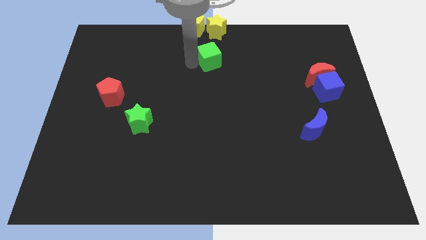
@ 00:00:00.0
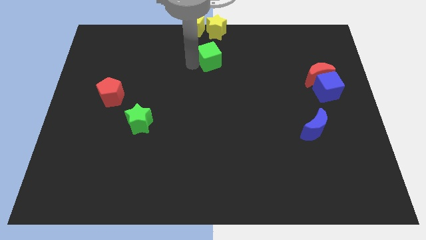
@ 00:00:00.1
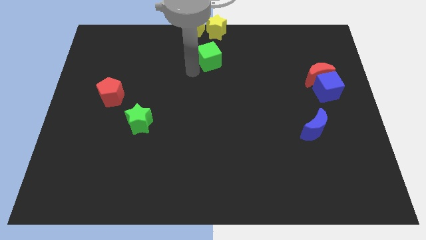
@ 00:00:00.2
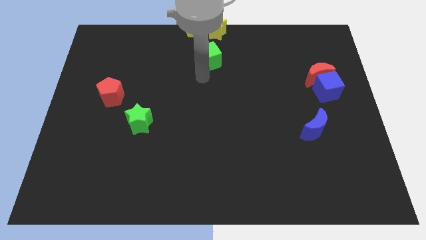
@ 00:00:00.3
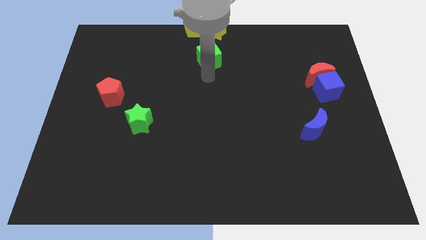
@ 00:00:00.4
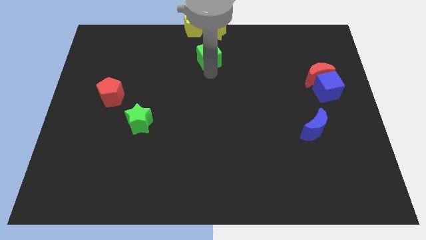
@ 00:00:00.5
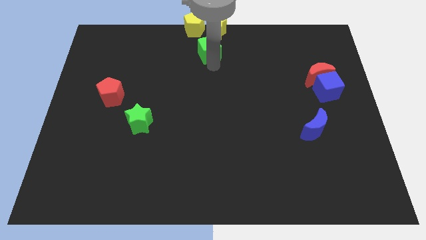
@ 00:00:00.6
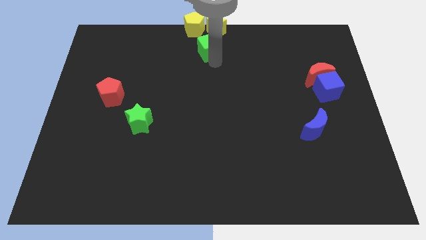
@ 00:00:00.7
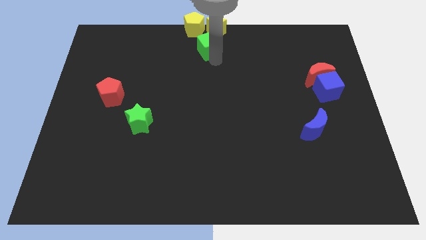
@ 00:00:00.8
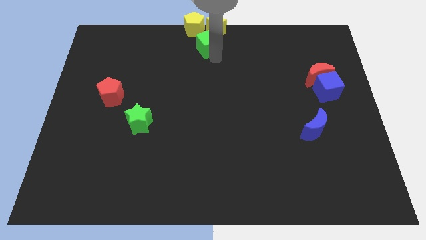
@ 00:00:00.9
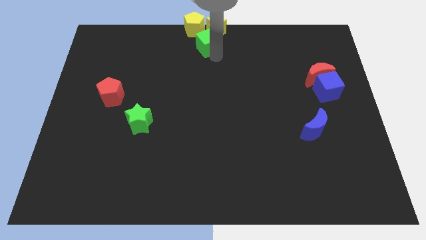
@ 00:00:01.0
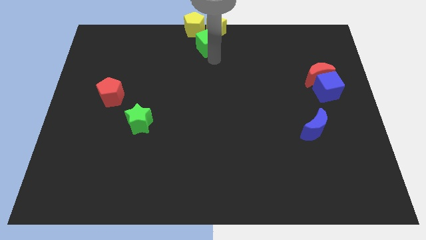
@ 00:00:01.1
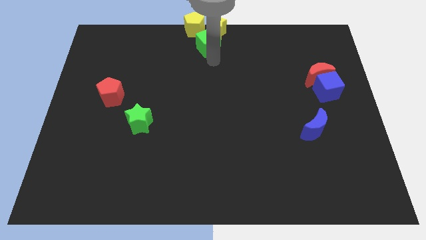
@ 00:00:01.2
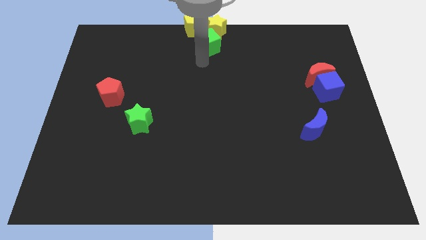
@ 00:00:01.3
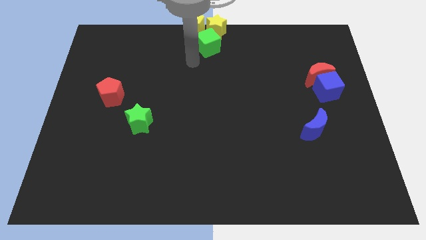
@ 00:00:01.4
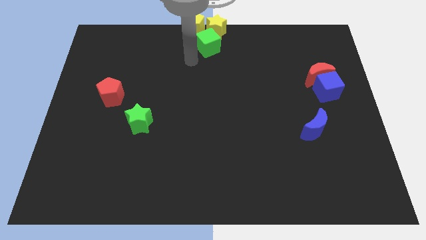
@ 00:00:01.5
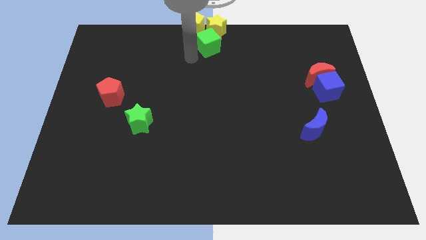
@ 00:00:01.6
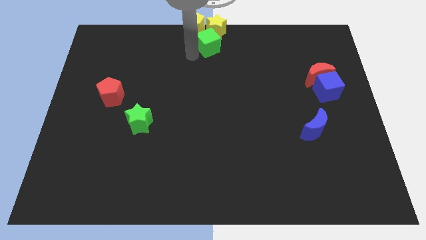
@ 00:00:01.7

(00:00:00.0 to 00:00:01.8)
place the green cube to the top center of the board

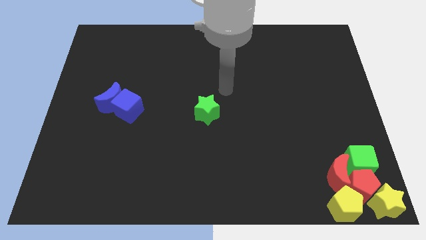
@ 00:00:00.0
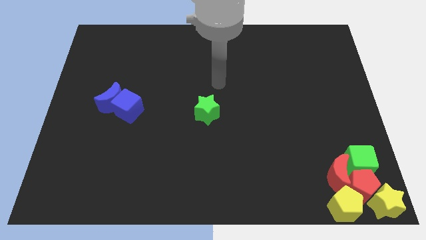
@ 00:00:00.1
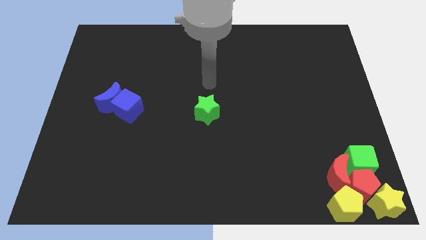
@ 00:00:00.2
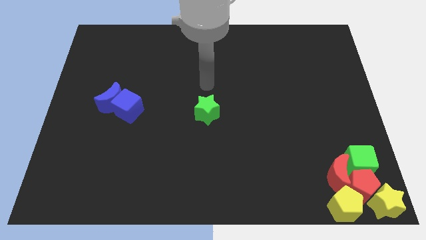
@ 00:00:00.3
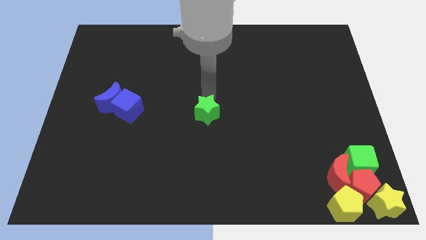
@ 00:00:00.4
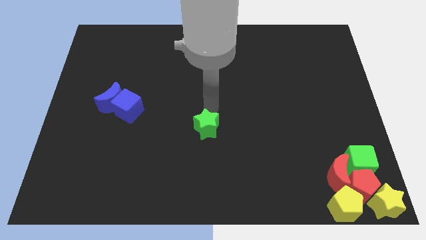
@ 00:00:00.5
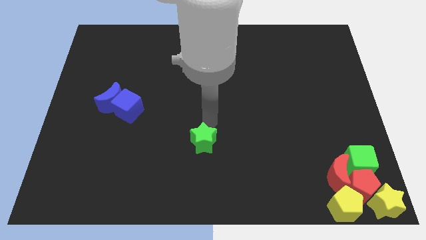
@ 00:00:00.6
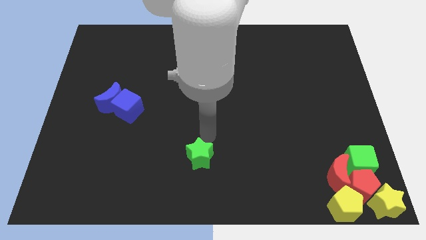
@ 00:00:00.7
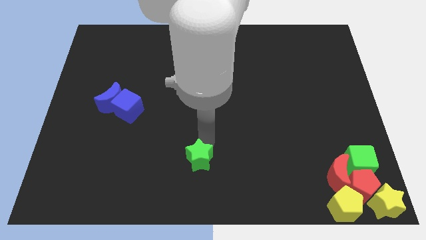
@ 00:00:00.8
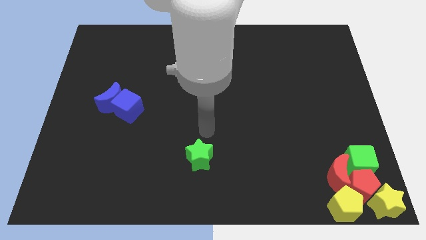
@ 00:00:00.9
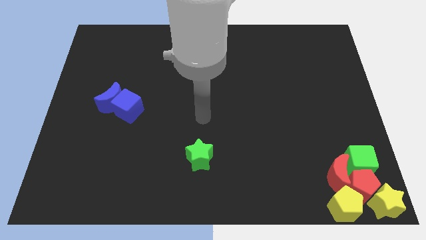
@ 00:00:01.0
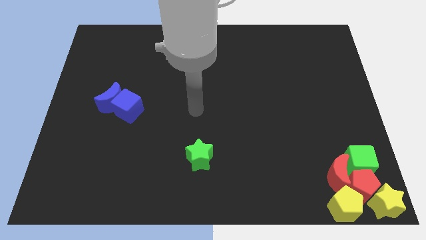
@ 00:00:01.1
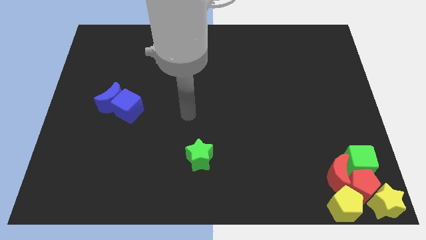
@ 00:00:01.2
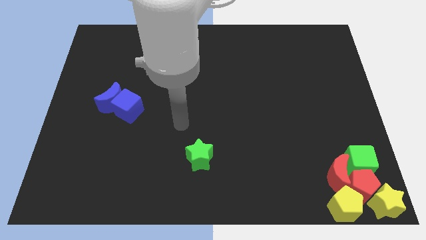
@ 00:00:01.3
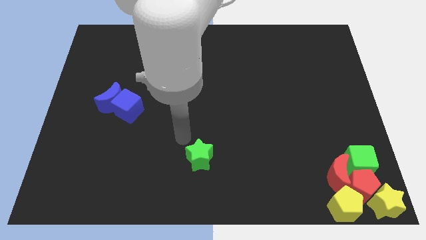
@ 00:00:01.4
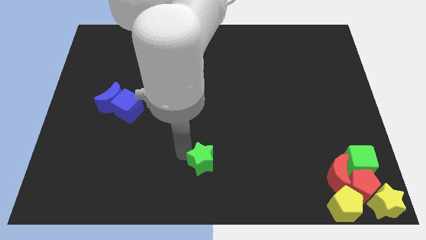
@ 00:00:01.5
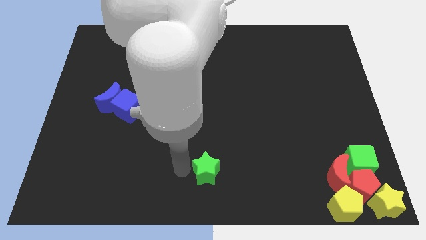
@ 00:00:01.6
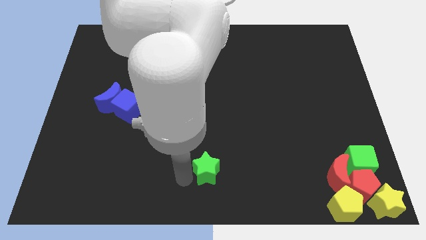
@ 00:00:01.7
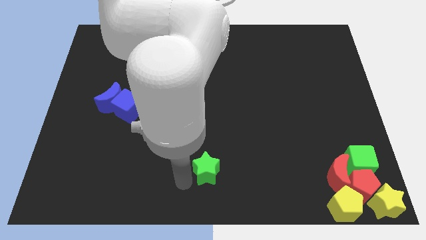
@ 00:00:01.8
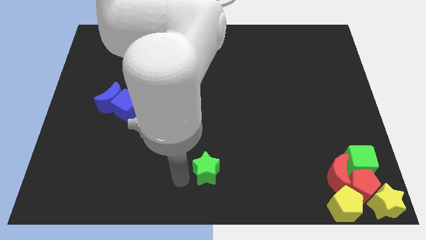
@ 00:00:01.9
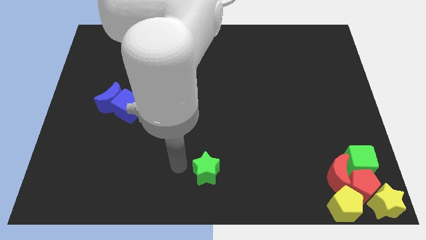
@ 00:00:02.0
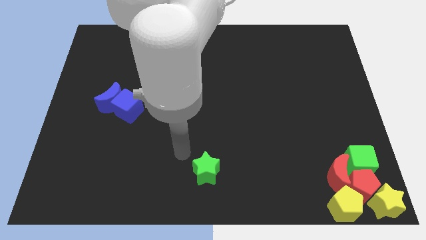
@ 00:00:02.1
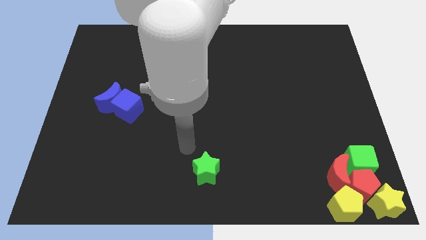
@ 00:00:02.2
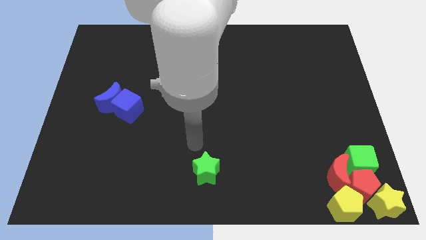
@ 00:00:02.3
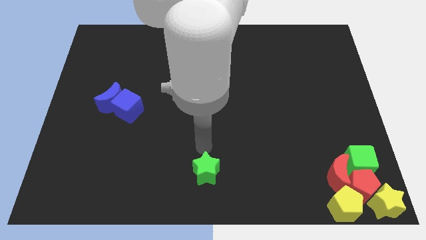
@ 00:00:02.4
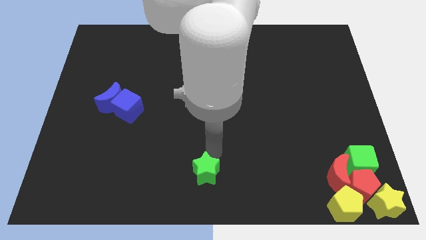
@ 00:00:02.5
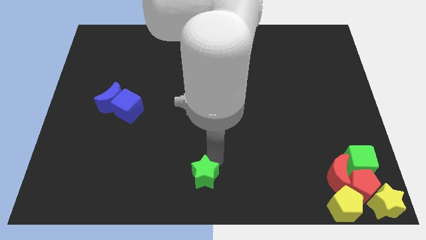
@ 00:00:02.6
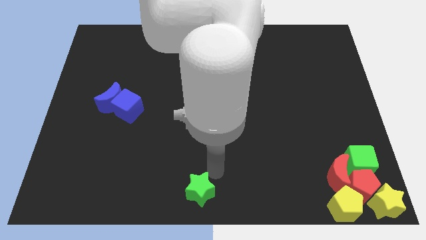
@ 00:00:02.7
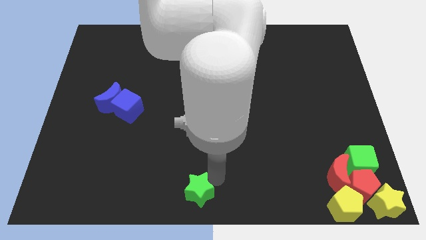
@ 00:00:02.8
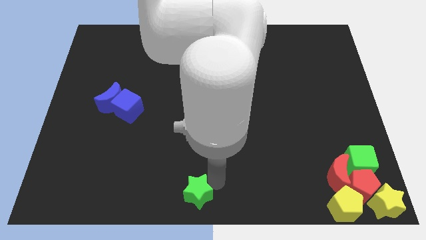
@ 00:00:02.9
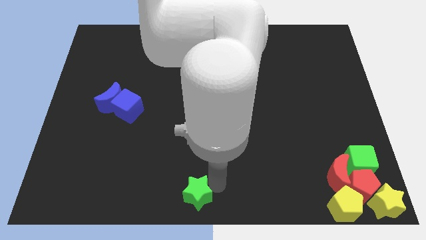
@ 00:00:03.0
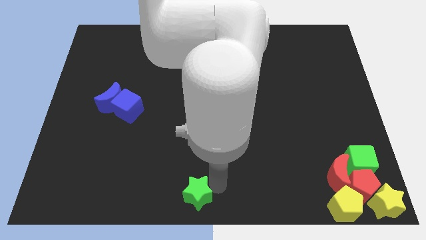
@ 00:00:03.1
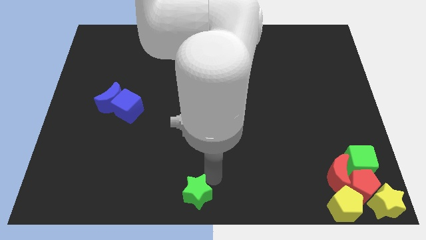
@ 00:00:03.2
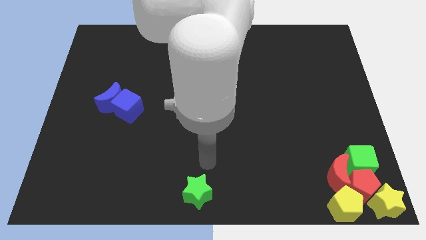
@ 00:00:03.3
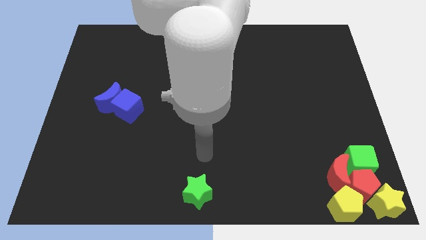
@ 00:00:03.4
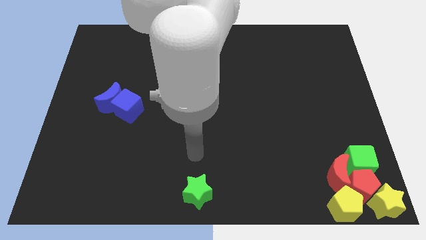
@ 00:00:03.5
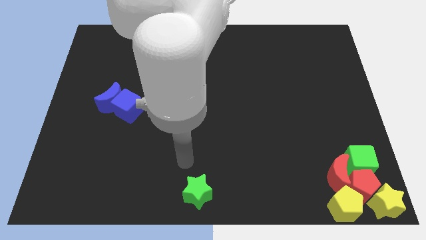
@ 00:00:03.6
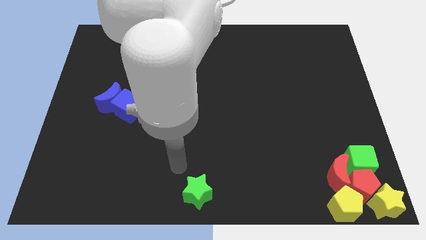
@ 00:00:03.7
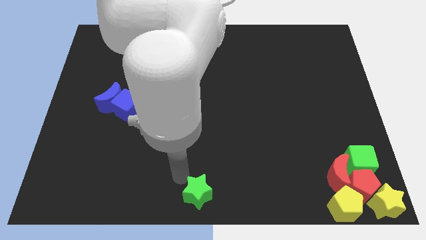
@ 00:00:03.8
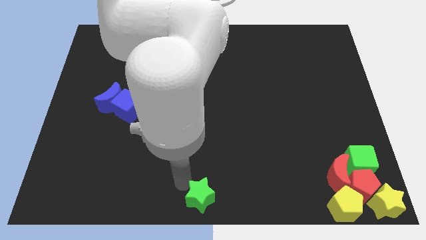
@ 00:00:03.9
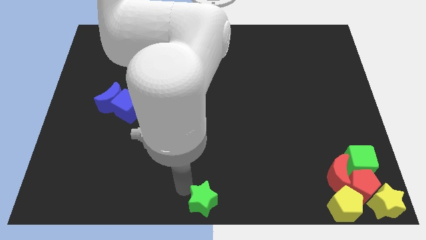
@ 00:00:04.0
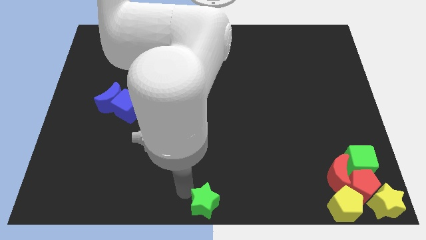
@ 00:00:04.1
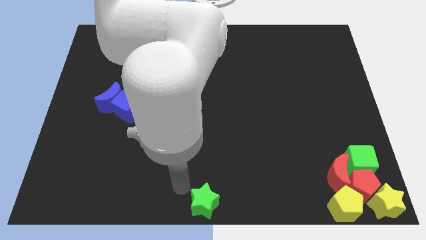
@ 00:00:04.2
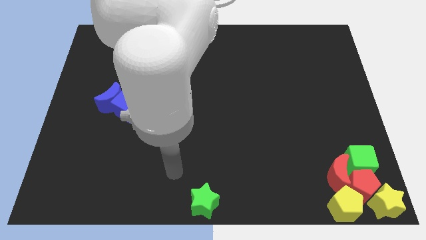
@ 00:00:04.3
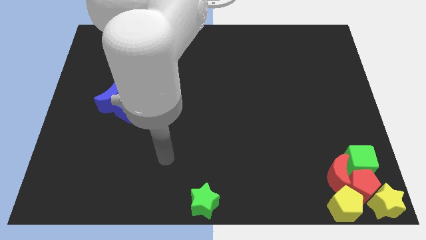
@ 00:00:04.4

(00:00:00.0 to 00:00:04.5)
push the green star to the bottom center of the board

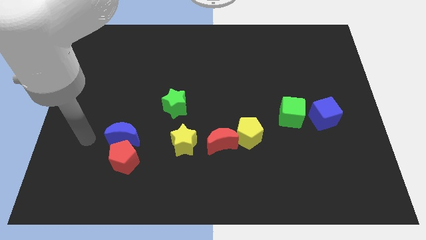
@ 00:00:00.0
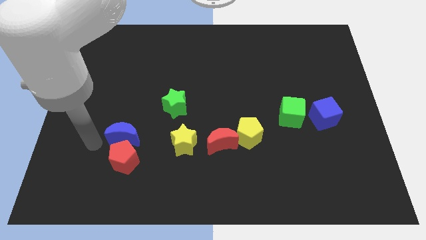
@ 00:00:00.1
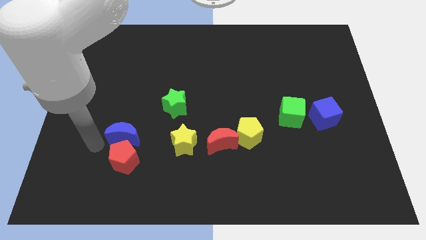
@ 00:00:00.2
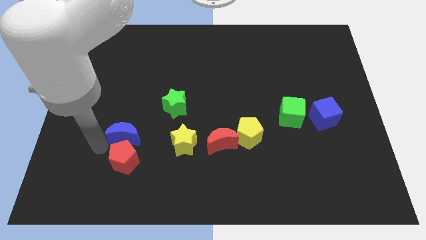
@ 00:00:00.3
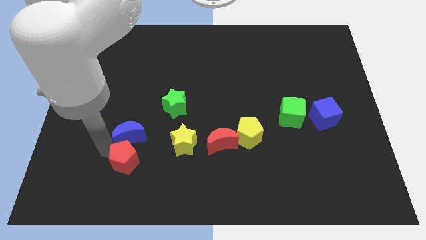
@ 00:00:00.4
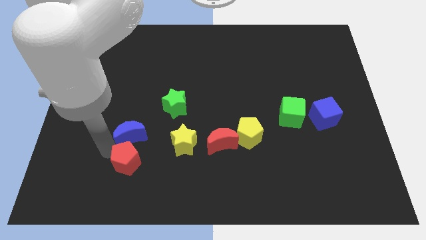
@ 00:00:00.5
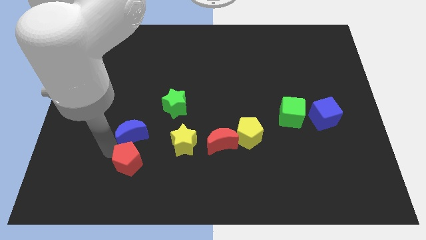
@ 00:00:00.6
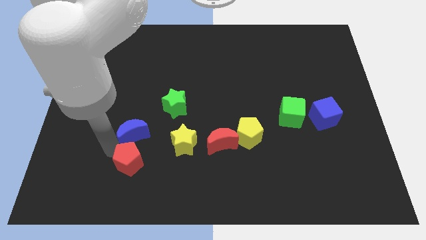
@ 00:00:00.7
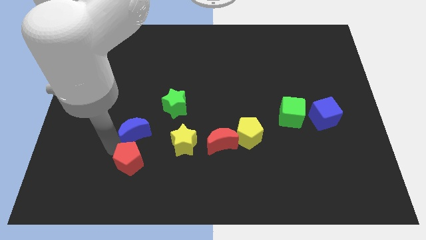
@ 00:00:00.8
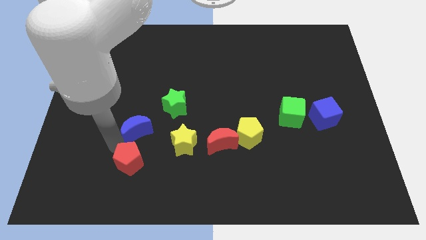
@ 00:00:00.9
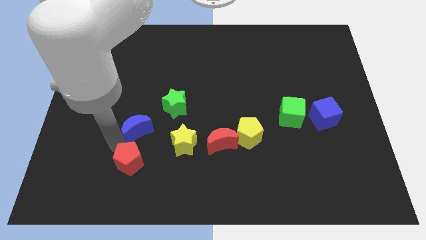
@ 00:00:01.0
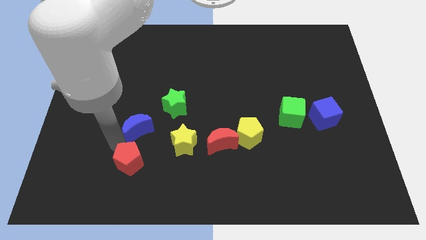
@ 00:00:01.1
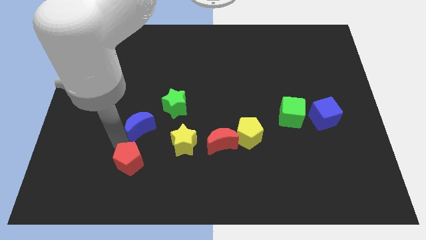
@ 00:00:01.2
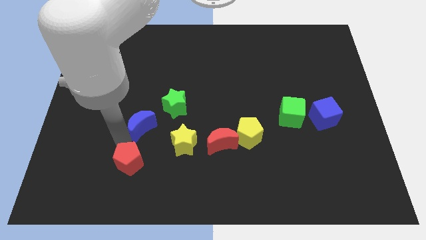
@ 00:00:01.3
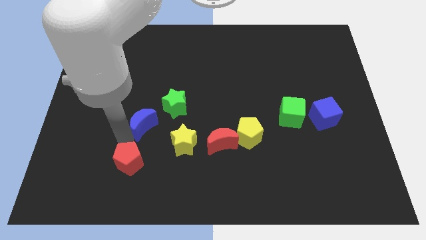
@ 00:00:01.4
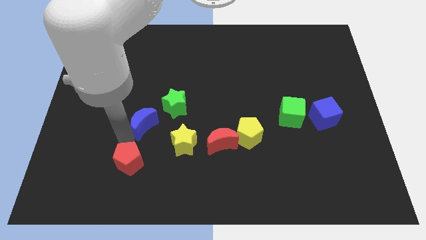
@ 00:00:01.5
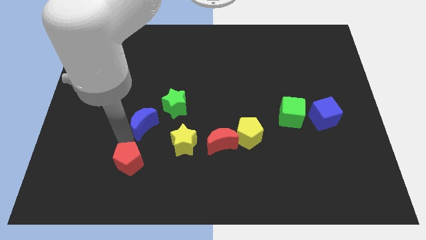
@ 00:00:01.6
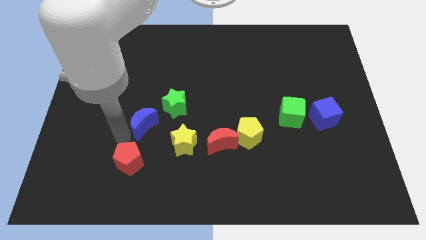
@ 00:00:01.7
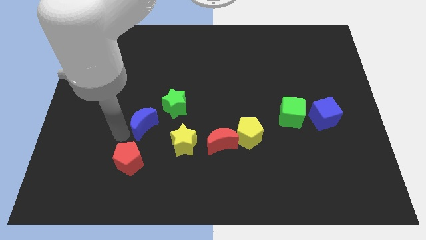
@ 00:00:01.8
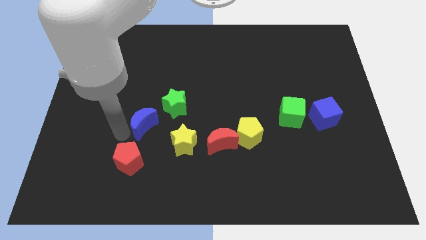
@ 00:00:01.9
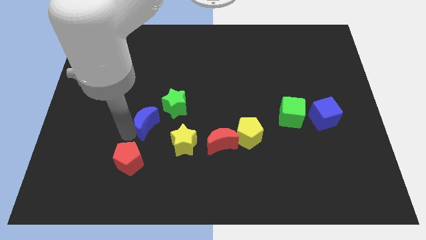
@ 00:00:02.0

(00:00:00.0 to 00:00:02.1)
separate blue moon from red pentagon

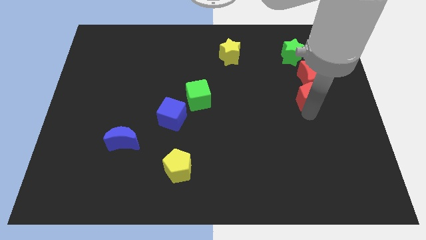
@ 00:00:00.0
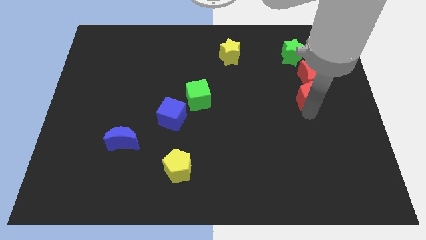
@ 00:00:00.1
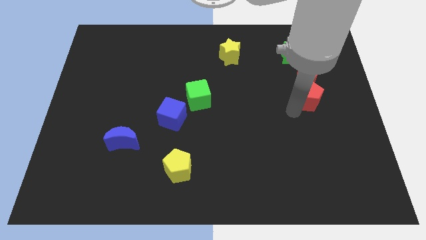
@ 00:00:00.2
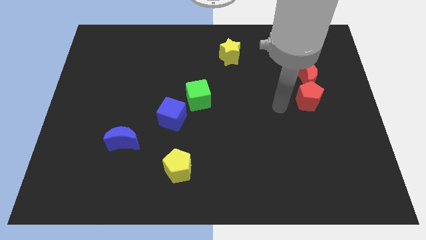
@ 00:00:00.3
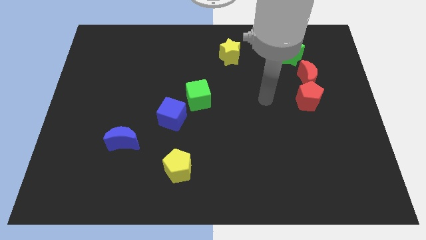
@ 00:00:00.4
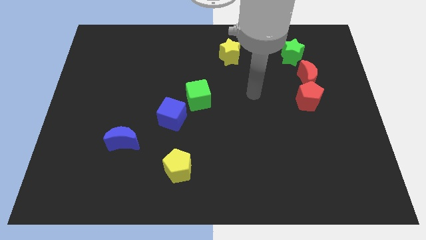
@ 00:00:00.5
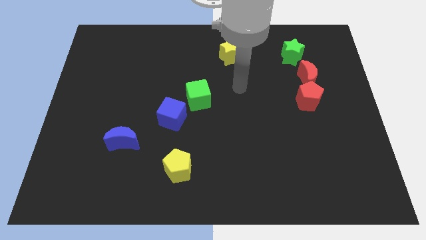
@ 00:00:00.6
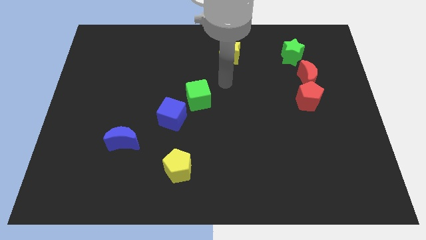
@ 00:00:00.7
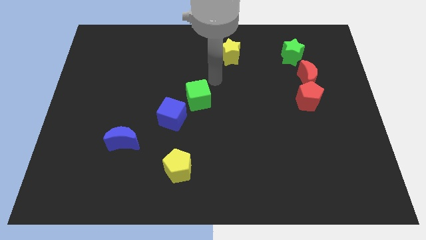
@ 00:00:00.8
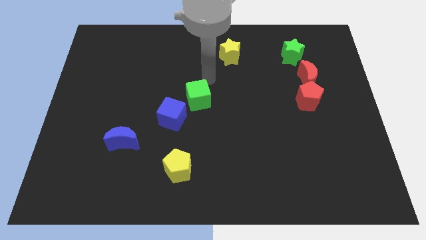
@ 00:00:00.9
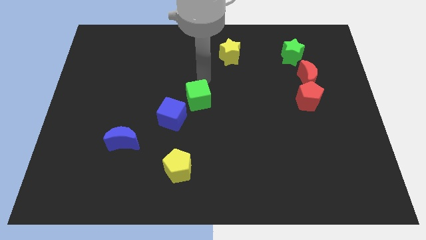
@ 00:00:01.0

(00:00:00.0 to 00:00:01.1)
move the arm to the top of the green cube
